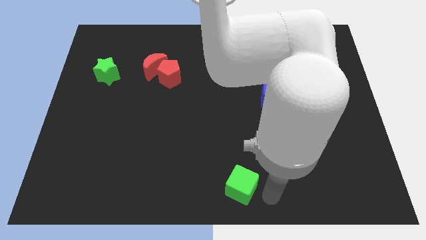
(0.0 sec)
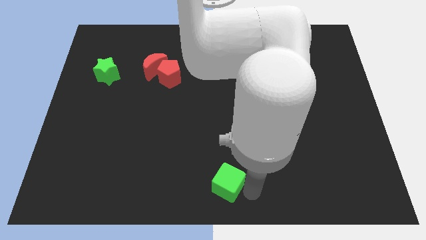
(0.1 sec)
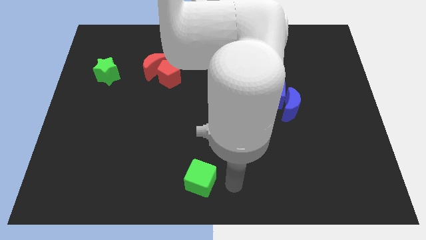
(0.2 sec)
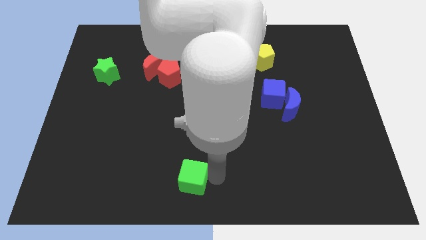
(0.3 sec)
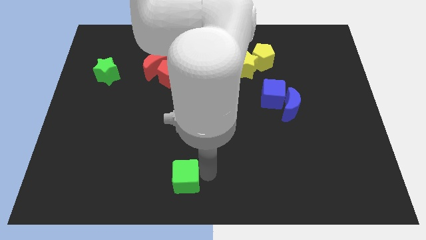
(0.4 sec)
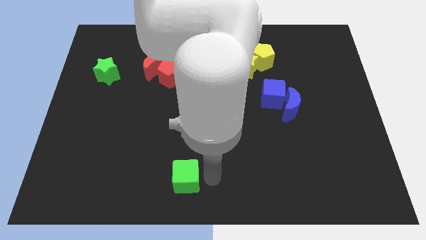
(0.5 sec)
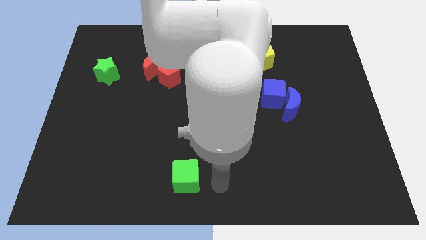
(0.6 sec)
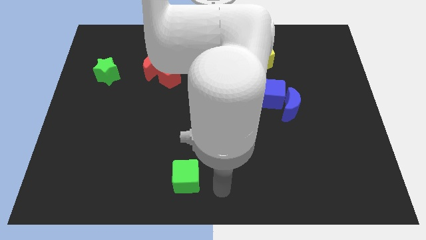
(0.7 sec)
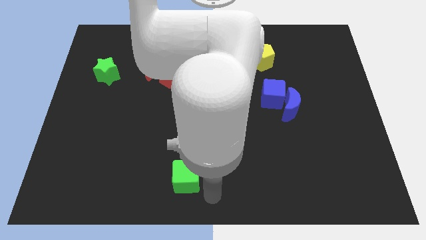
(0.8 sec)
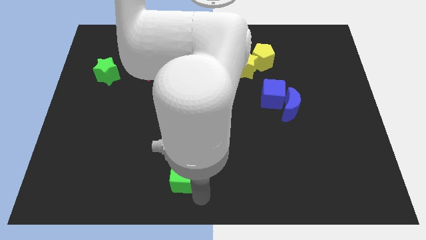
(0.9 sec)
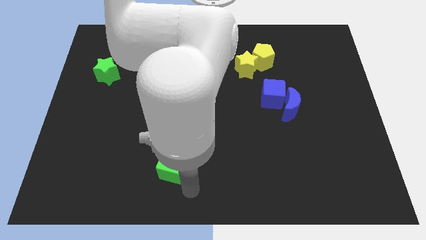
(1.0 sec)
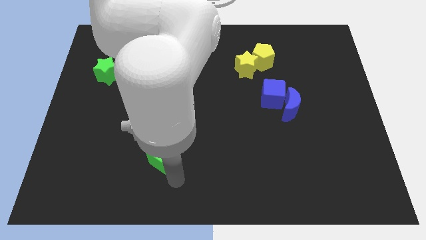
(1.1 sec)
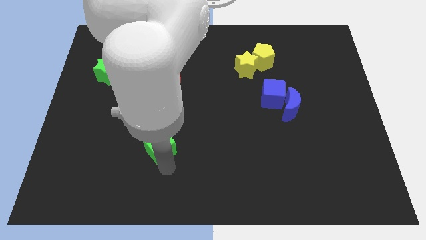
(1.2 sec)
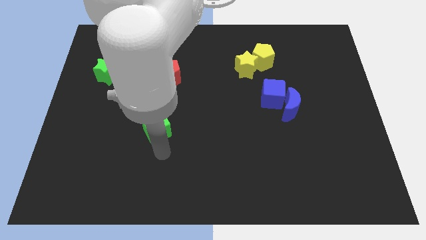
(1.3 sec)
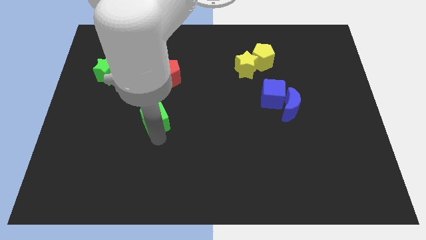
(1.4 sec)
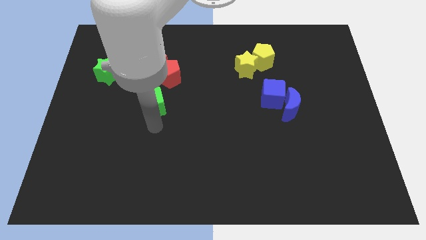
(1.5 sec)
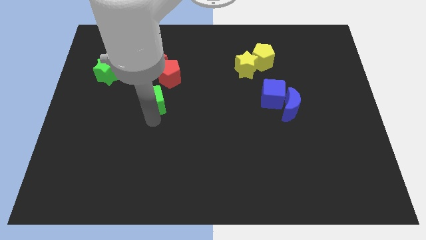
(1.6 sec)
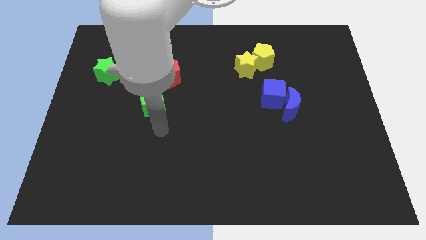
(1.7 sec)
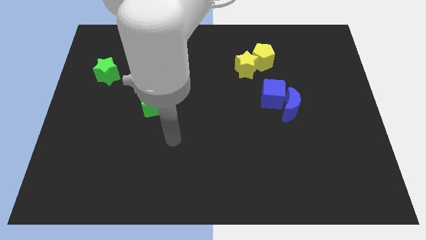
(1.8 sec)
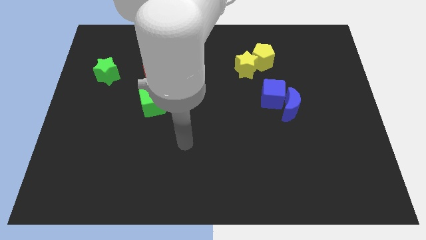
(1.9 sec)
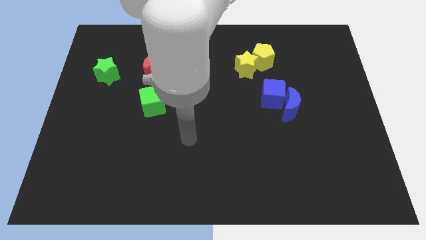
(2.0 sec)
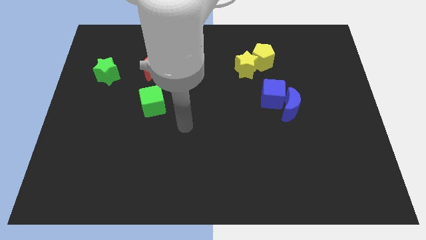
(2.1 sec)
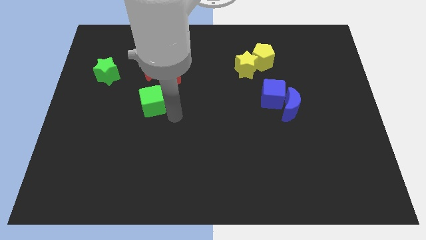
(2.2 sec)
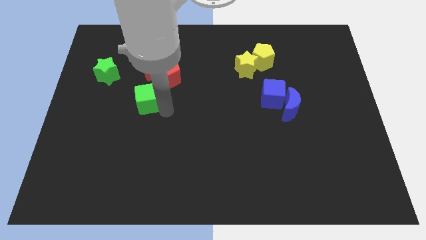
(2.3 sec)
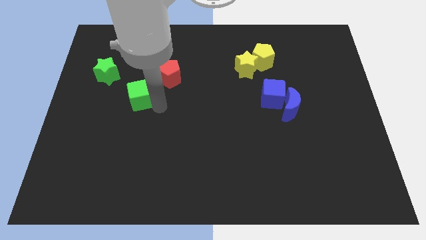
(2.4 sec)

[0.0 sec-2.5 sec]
place the green cube diagonal to the red pentagon

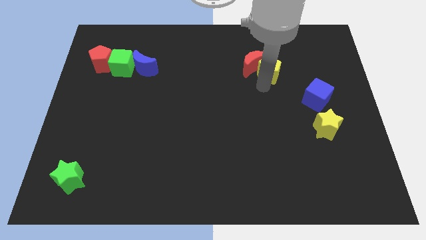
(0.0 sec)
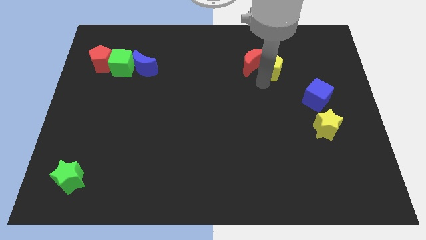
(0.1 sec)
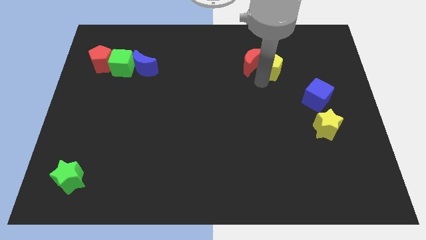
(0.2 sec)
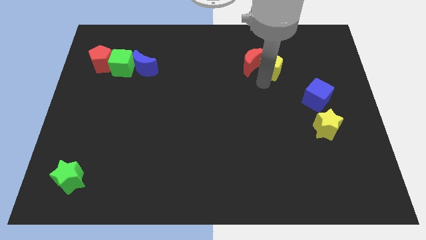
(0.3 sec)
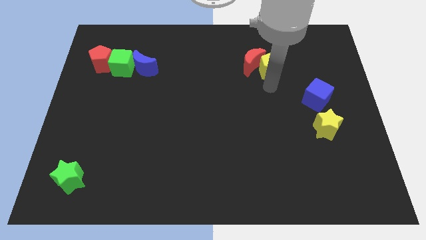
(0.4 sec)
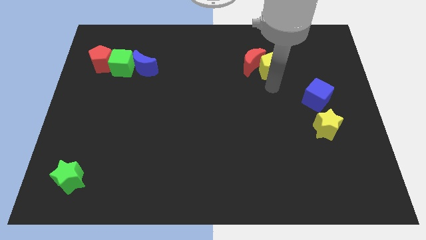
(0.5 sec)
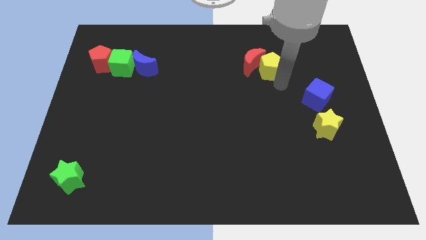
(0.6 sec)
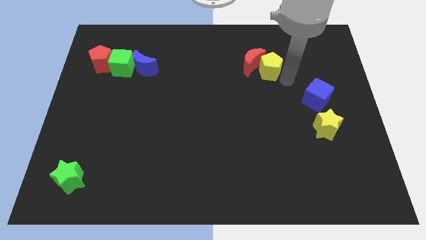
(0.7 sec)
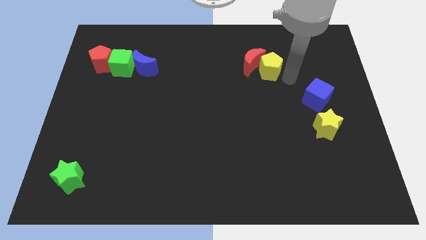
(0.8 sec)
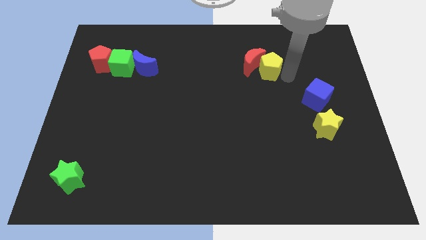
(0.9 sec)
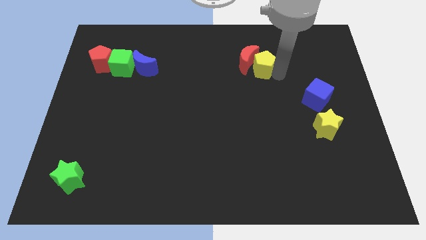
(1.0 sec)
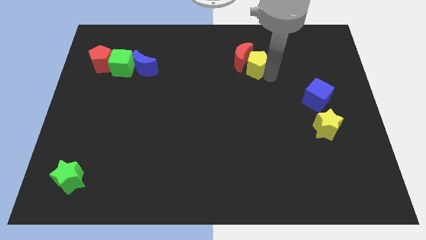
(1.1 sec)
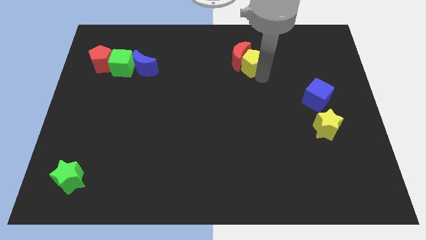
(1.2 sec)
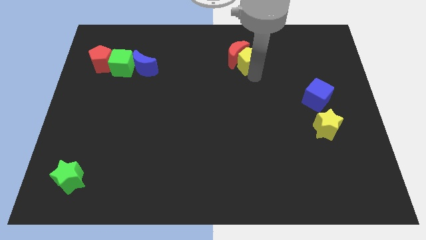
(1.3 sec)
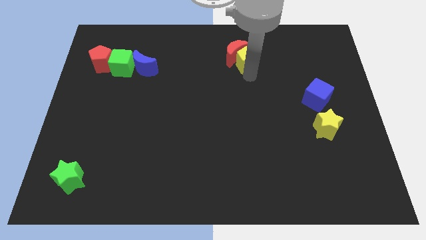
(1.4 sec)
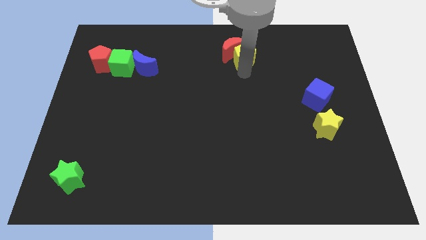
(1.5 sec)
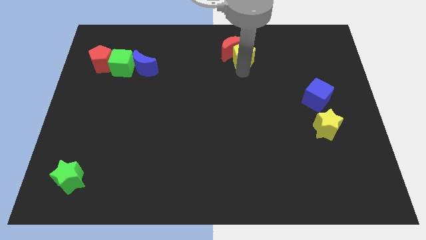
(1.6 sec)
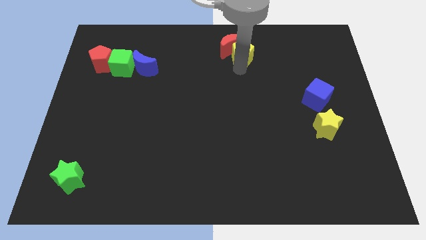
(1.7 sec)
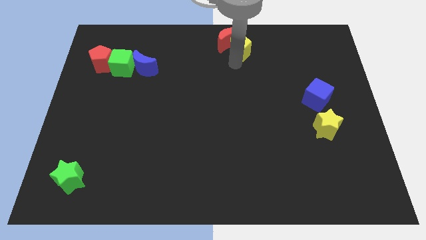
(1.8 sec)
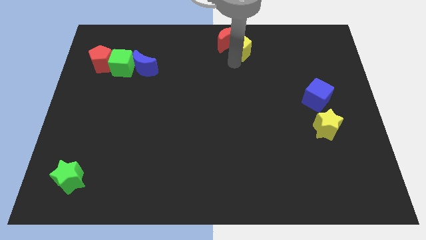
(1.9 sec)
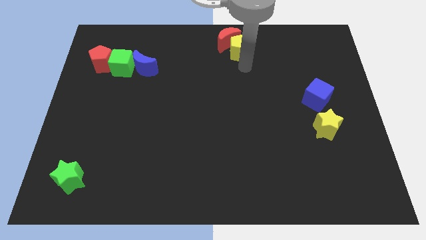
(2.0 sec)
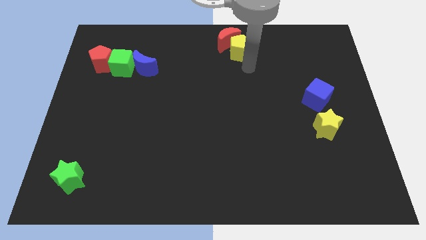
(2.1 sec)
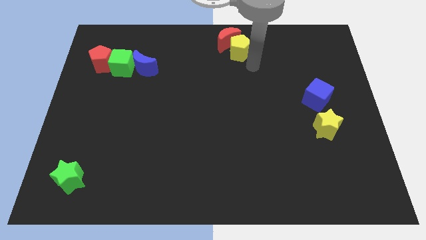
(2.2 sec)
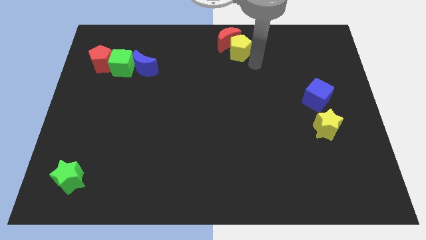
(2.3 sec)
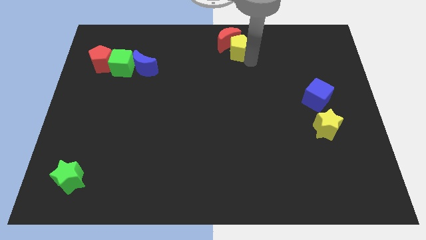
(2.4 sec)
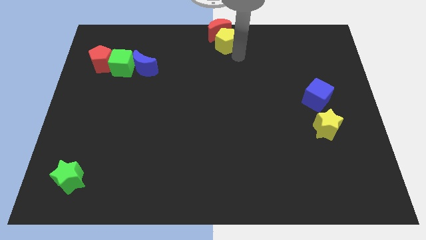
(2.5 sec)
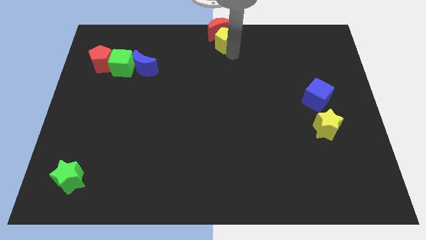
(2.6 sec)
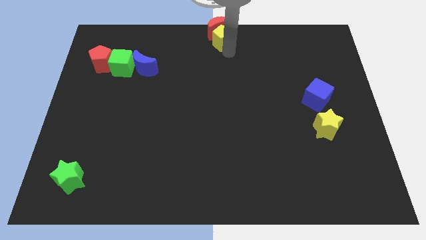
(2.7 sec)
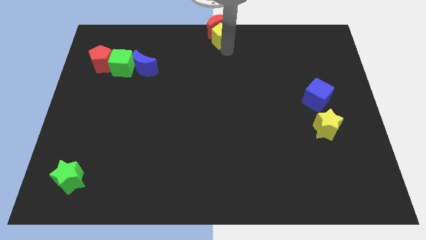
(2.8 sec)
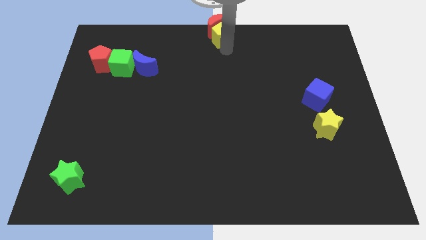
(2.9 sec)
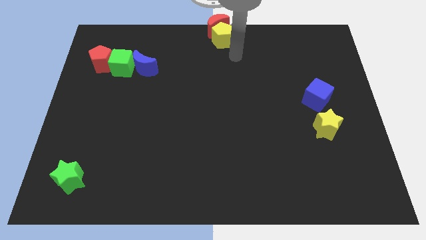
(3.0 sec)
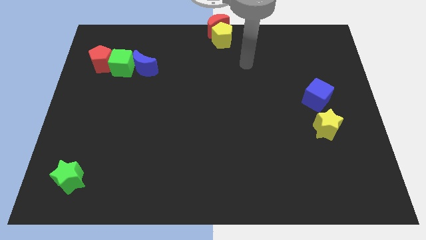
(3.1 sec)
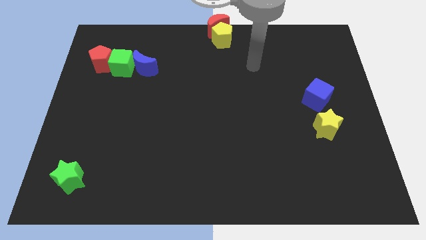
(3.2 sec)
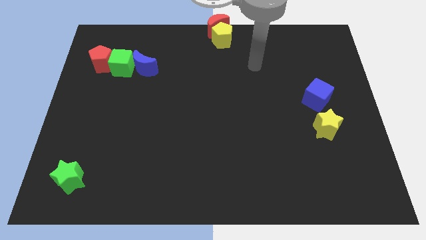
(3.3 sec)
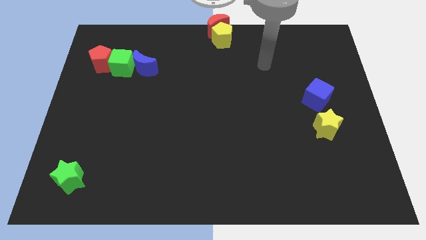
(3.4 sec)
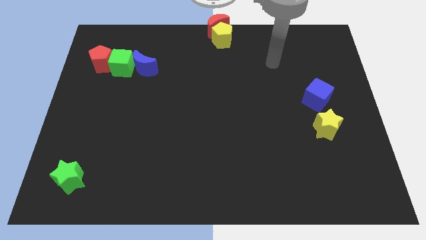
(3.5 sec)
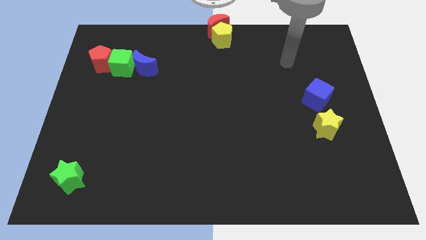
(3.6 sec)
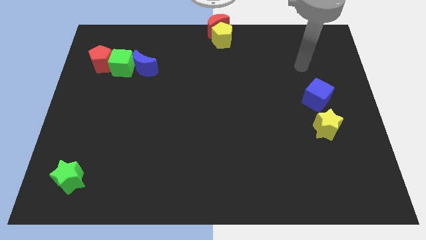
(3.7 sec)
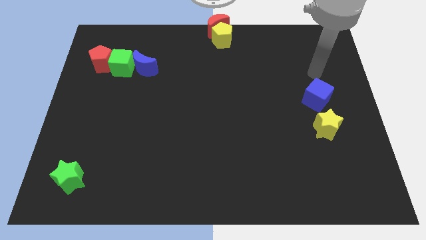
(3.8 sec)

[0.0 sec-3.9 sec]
move the red moon to the top middle with yellow pentagon

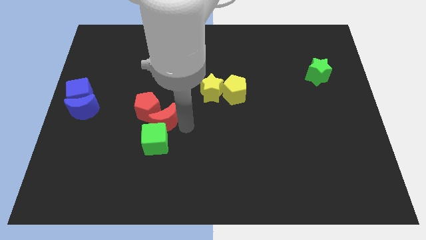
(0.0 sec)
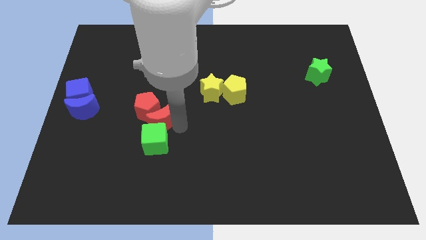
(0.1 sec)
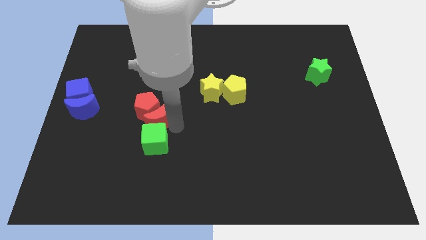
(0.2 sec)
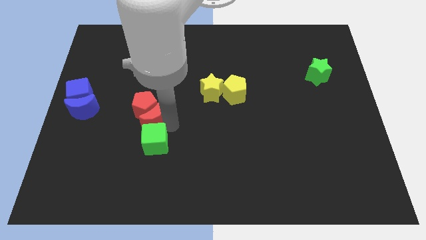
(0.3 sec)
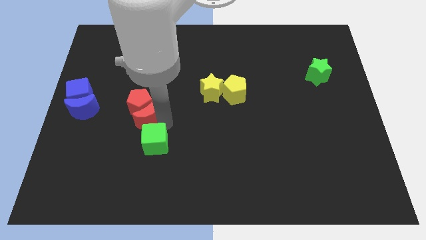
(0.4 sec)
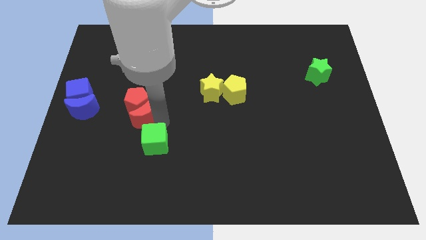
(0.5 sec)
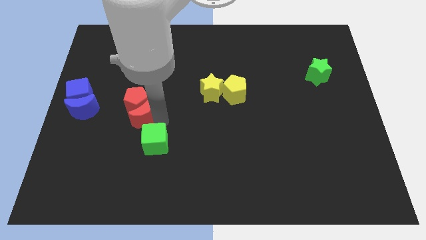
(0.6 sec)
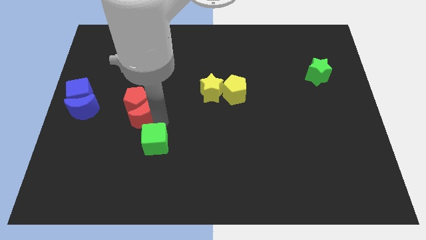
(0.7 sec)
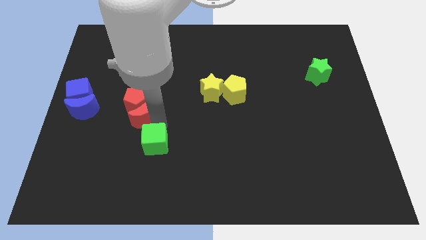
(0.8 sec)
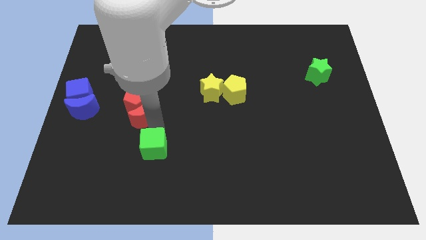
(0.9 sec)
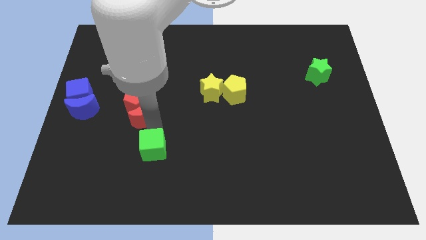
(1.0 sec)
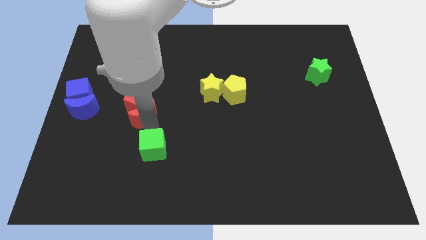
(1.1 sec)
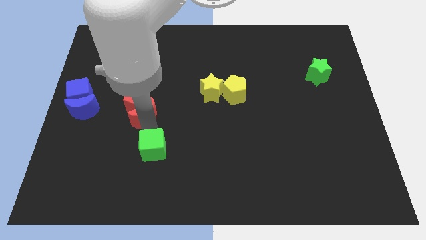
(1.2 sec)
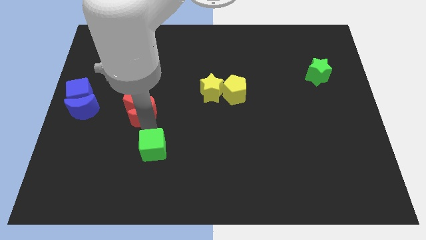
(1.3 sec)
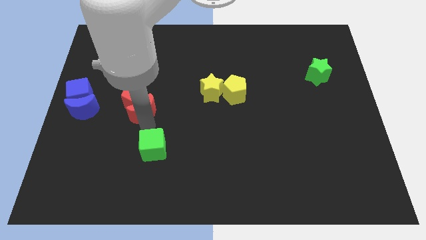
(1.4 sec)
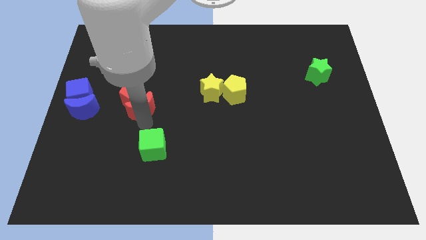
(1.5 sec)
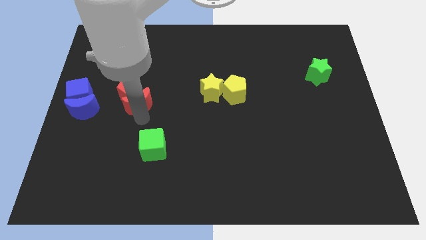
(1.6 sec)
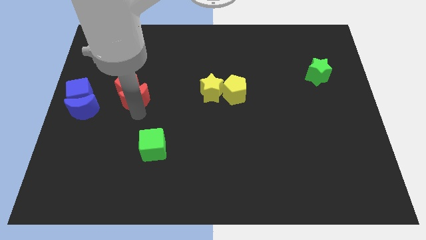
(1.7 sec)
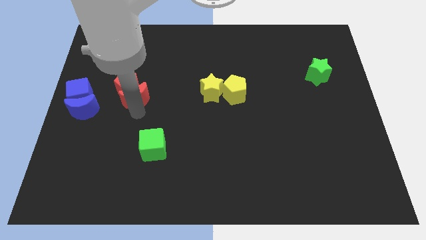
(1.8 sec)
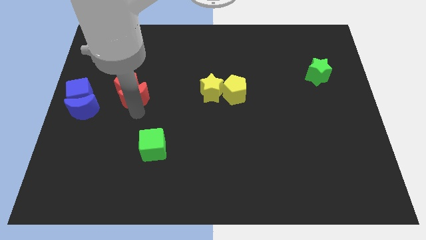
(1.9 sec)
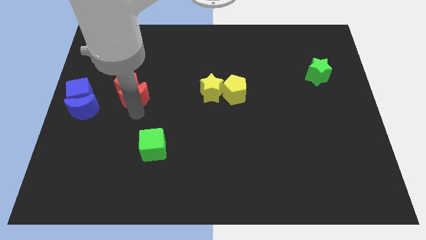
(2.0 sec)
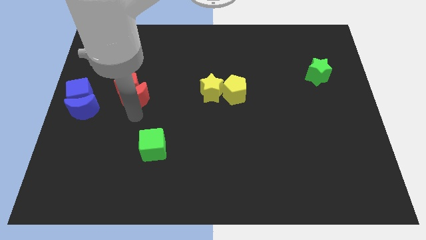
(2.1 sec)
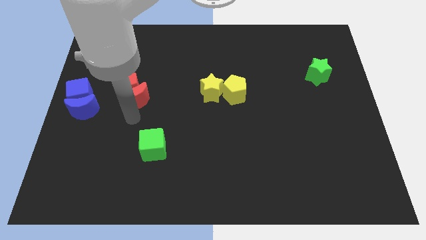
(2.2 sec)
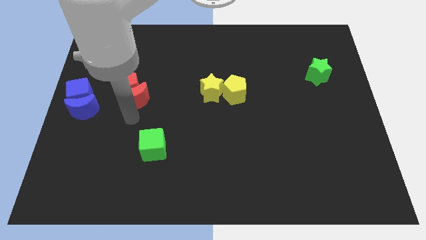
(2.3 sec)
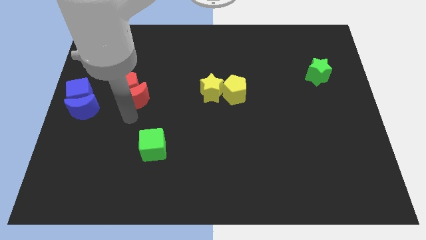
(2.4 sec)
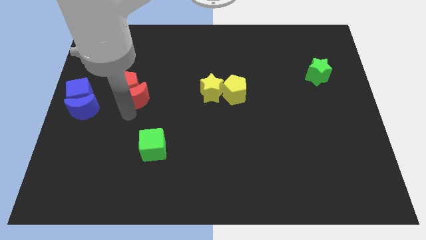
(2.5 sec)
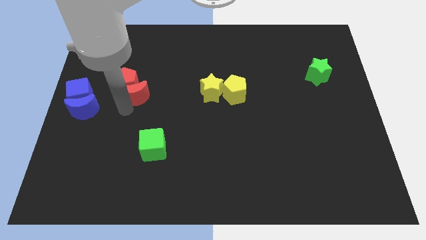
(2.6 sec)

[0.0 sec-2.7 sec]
push the red crescent with red pentagon slightly upwards
